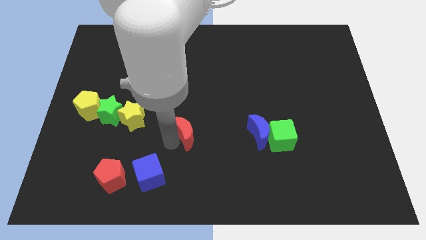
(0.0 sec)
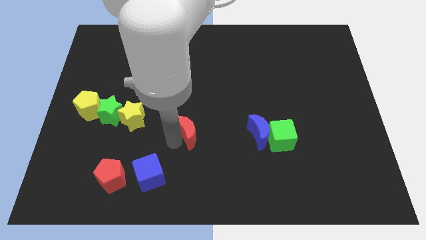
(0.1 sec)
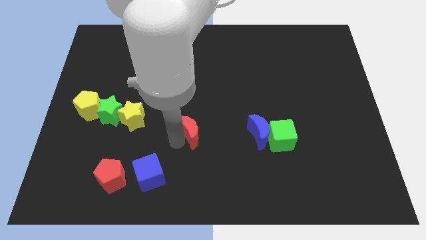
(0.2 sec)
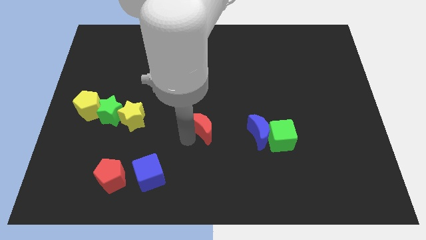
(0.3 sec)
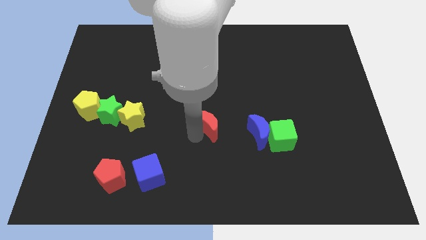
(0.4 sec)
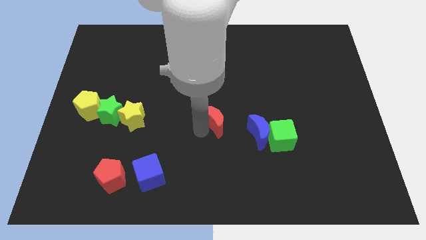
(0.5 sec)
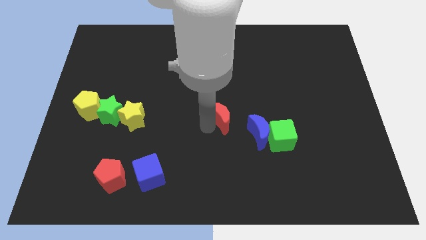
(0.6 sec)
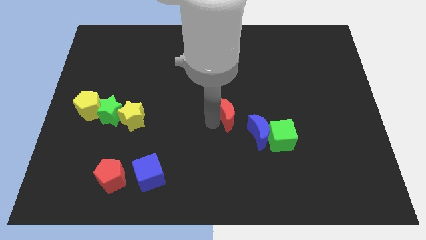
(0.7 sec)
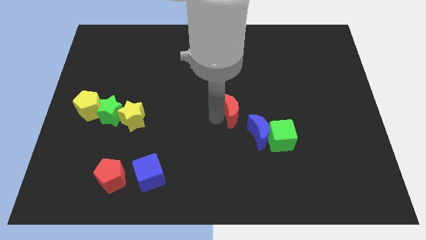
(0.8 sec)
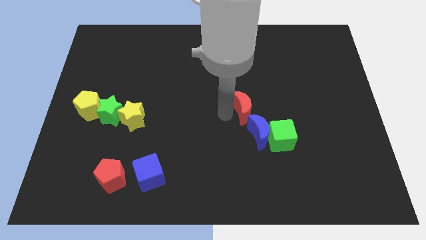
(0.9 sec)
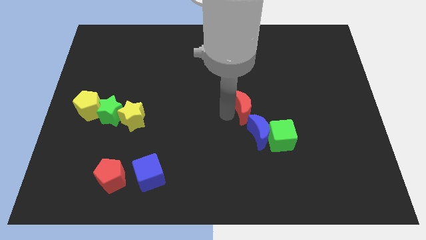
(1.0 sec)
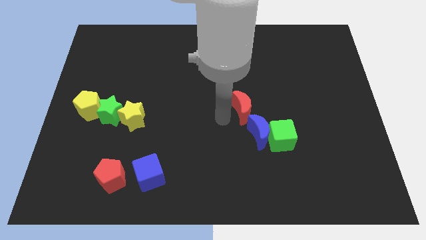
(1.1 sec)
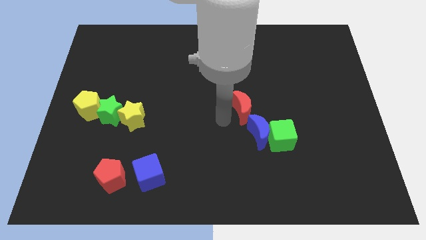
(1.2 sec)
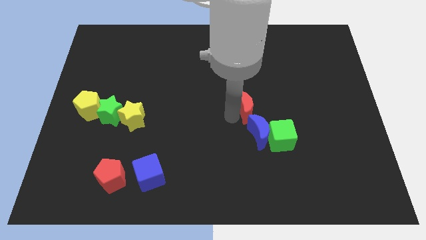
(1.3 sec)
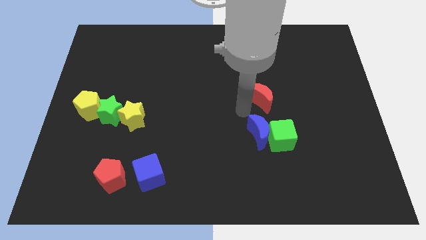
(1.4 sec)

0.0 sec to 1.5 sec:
move the red crescent to the top left side of the blue moon

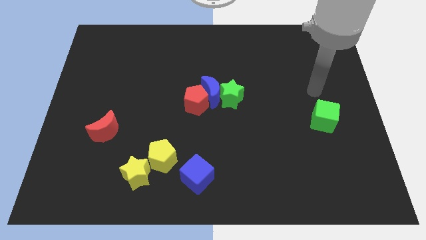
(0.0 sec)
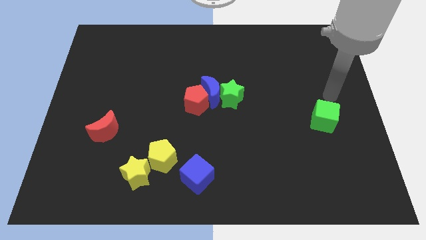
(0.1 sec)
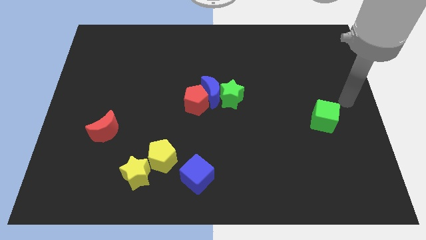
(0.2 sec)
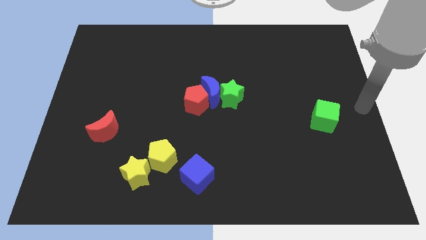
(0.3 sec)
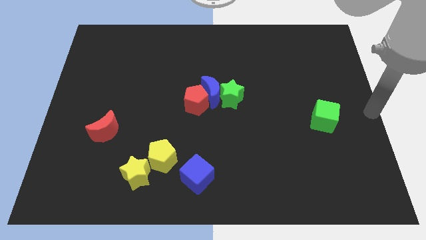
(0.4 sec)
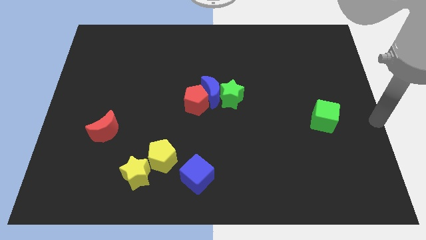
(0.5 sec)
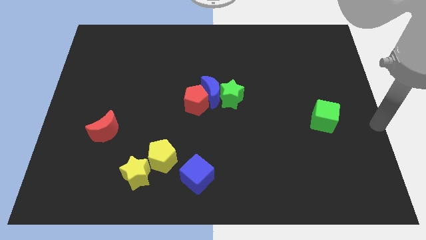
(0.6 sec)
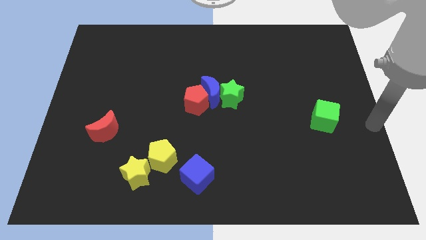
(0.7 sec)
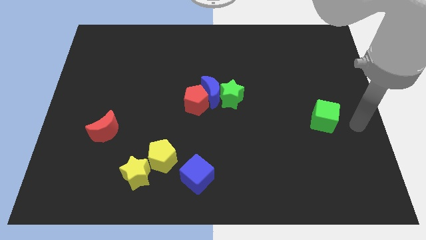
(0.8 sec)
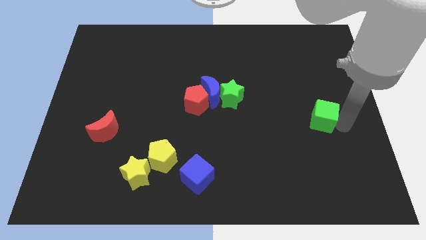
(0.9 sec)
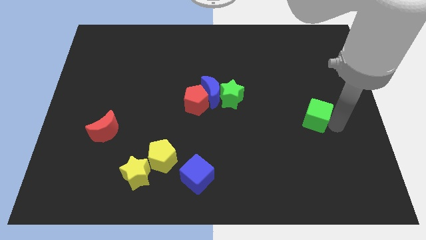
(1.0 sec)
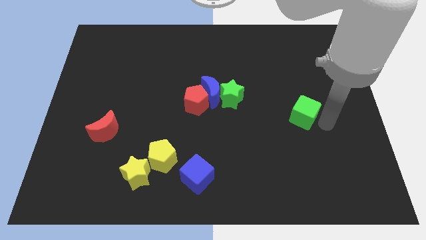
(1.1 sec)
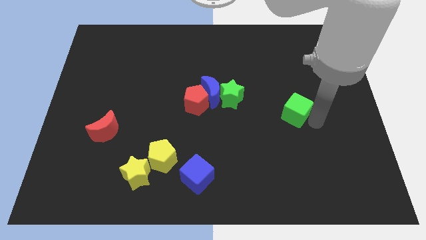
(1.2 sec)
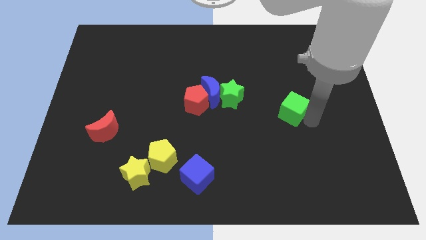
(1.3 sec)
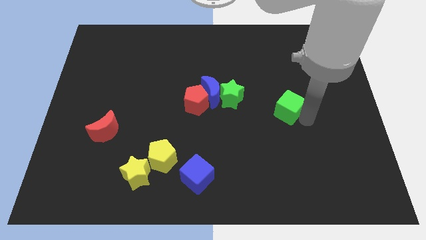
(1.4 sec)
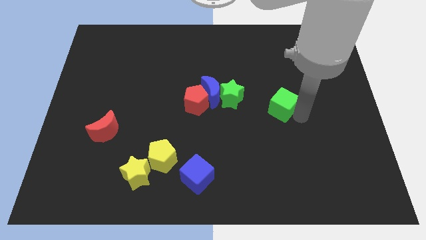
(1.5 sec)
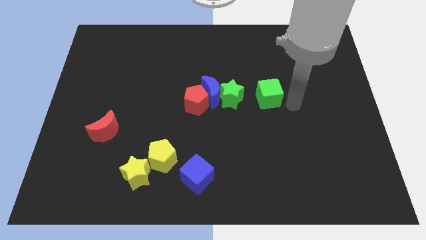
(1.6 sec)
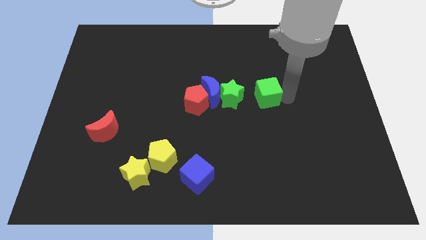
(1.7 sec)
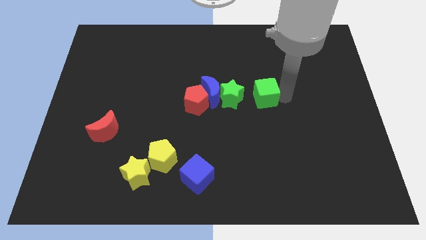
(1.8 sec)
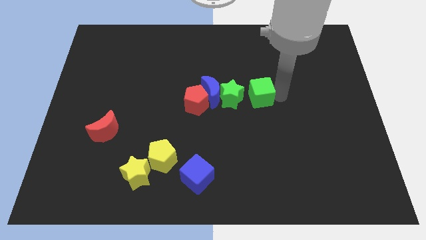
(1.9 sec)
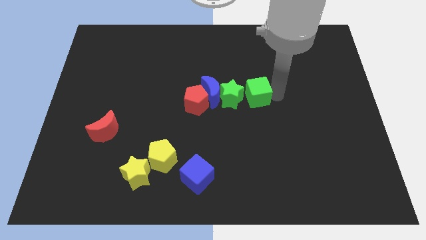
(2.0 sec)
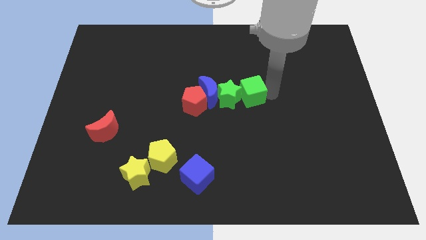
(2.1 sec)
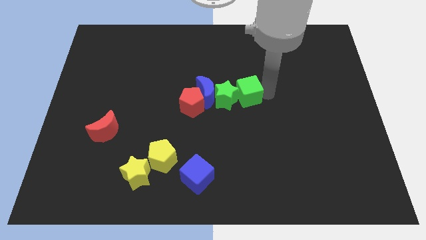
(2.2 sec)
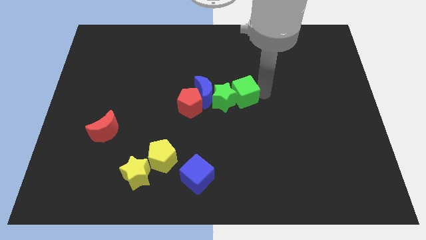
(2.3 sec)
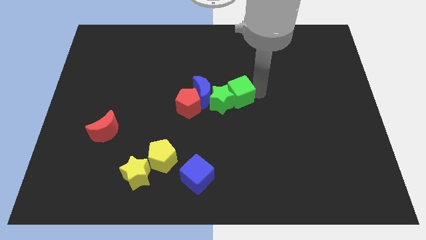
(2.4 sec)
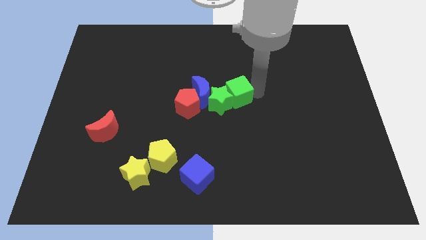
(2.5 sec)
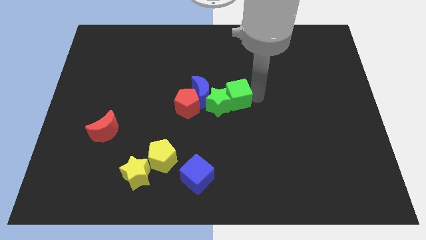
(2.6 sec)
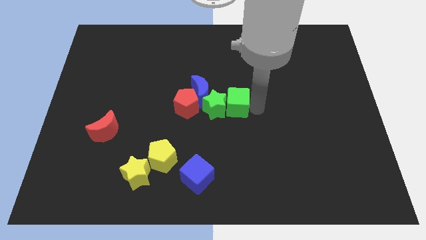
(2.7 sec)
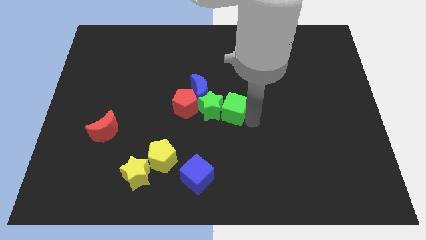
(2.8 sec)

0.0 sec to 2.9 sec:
place the green cube right to the green star

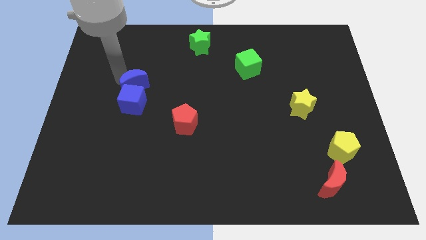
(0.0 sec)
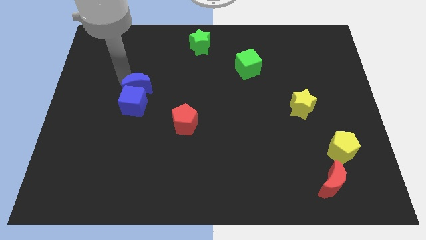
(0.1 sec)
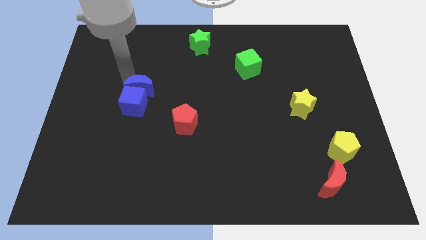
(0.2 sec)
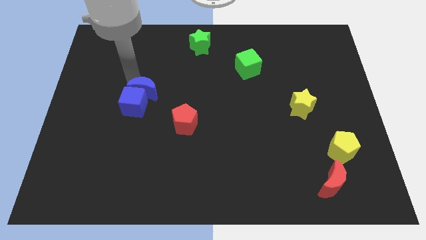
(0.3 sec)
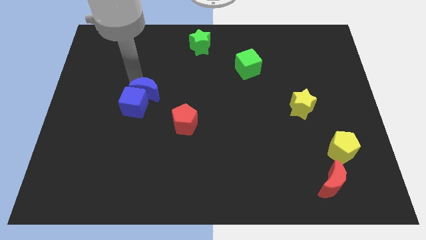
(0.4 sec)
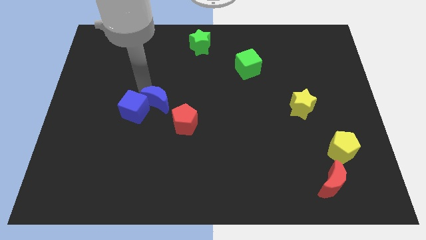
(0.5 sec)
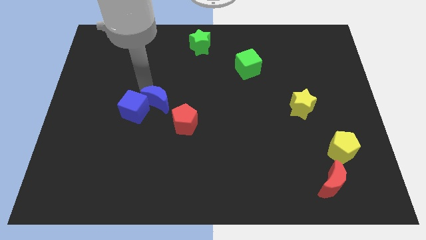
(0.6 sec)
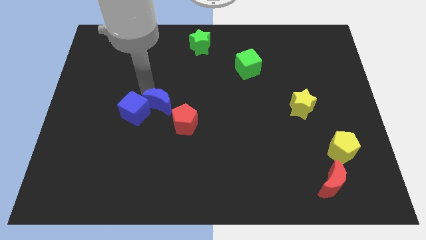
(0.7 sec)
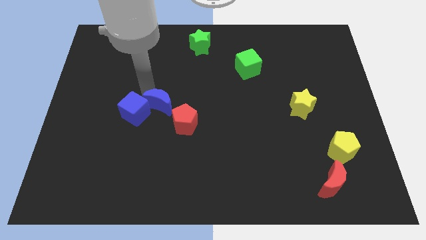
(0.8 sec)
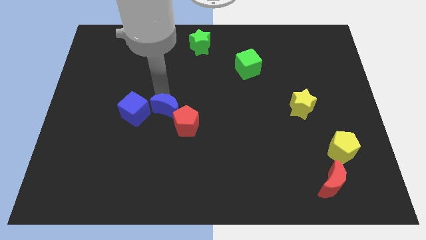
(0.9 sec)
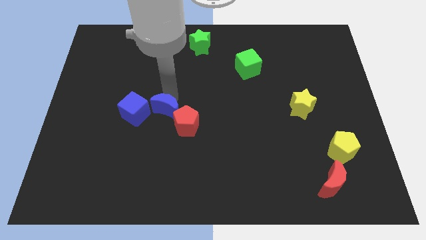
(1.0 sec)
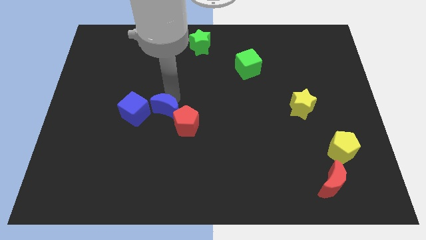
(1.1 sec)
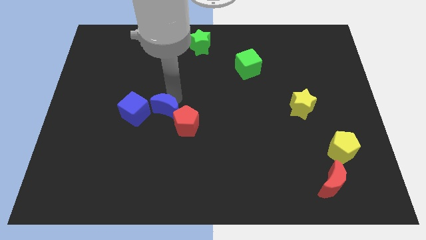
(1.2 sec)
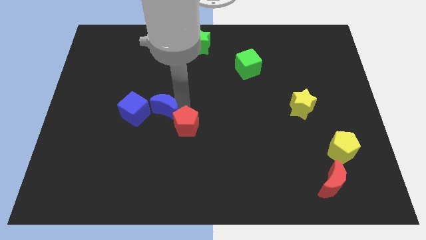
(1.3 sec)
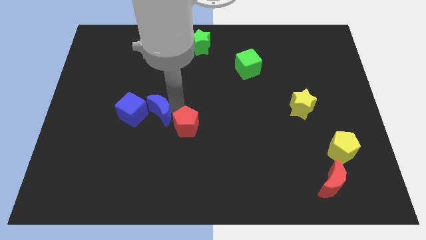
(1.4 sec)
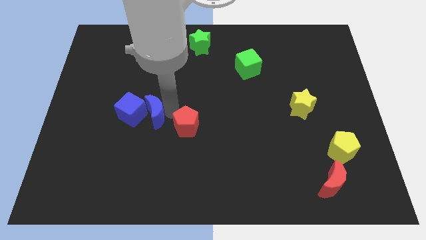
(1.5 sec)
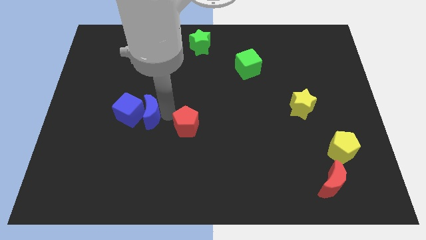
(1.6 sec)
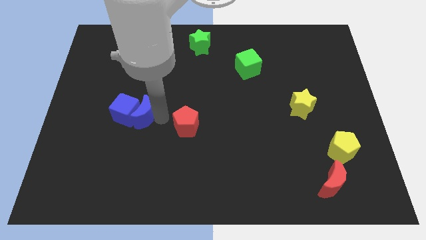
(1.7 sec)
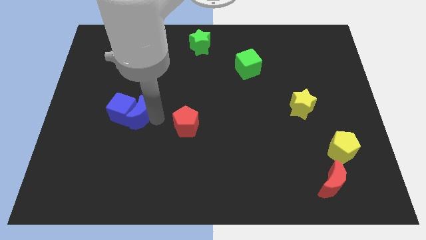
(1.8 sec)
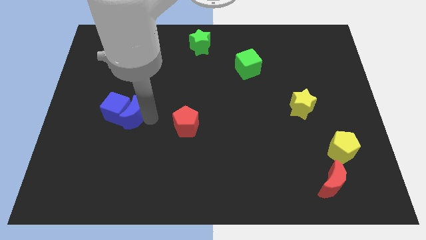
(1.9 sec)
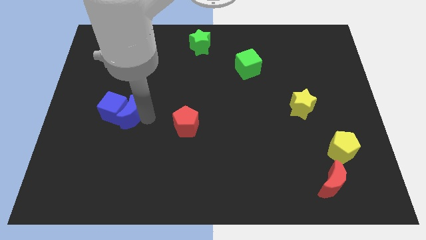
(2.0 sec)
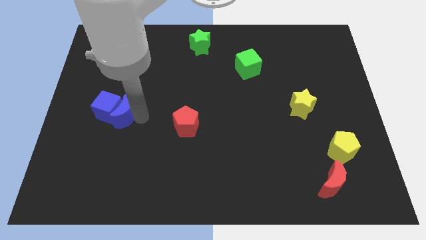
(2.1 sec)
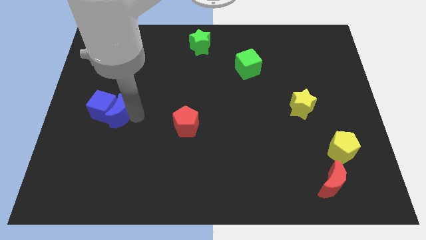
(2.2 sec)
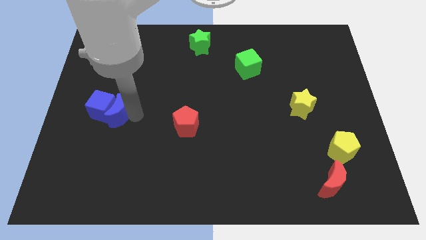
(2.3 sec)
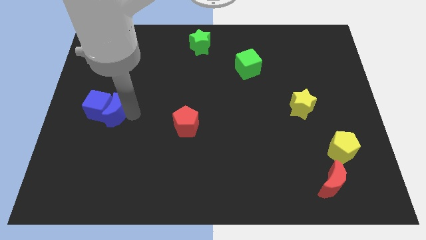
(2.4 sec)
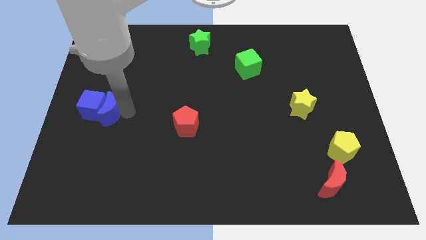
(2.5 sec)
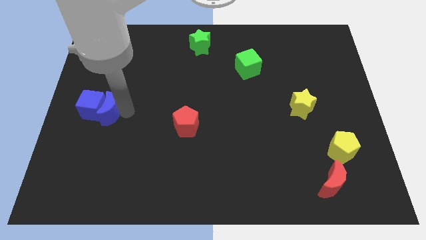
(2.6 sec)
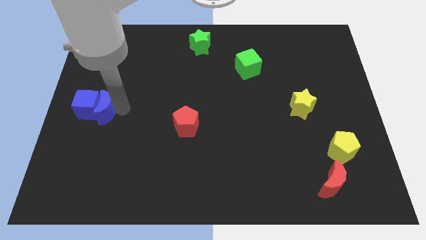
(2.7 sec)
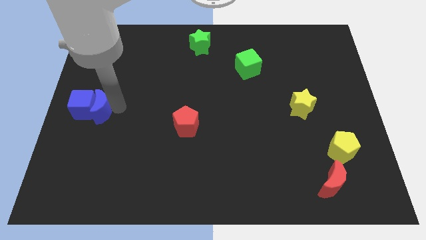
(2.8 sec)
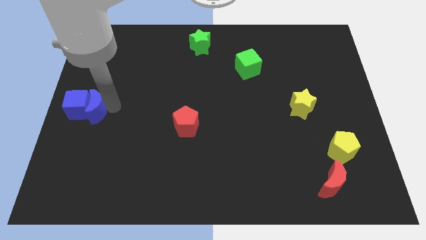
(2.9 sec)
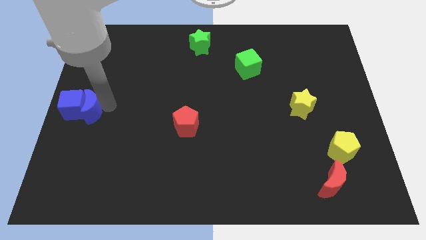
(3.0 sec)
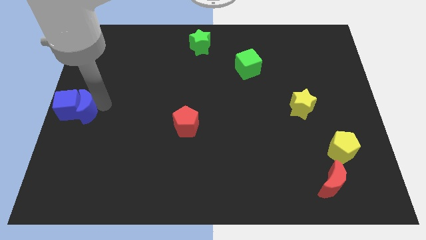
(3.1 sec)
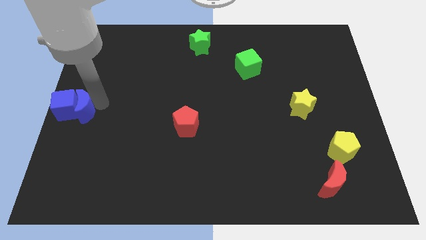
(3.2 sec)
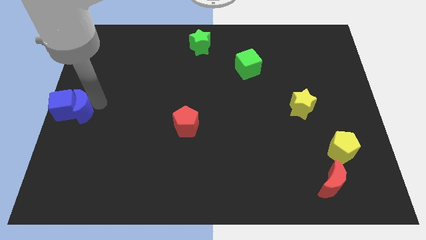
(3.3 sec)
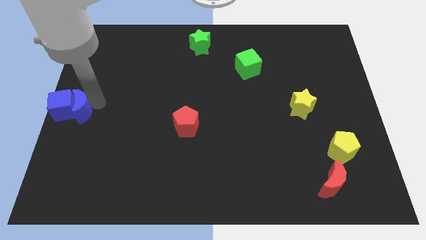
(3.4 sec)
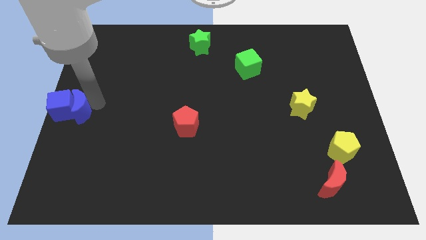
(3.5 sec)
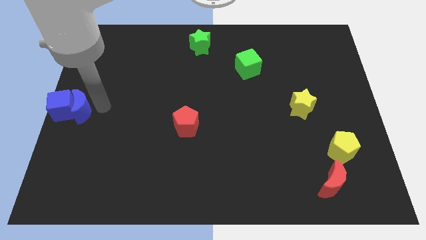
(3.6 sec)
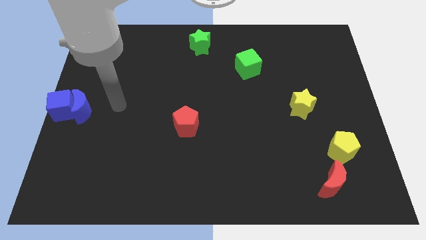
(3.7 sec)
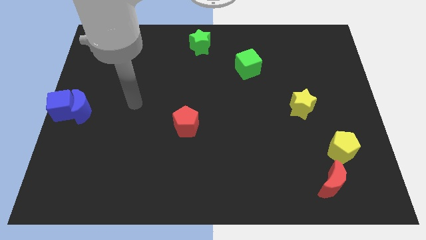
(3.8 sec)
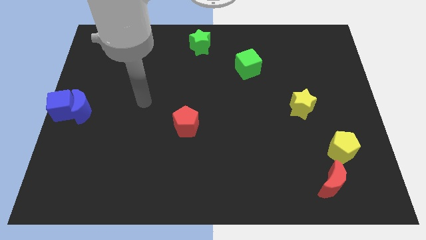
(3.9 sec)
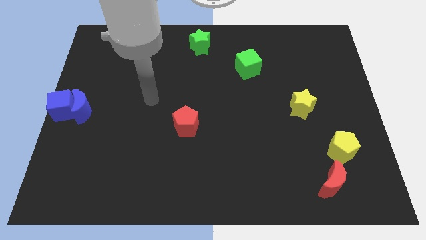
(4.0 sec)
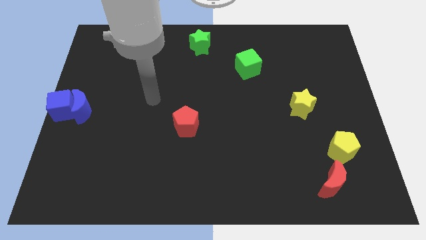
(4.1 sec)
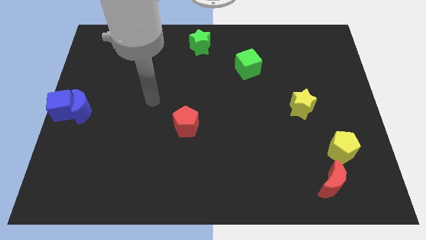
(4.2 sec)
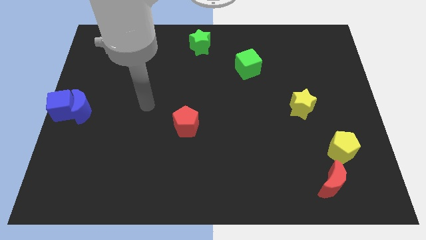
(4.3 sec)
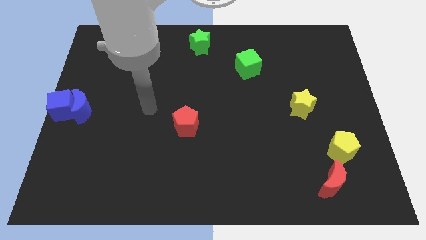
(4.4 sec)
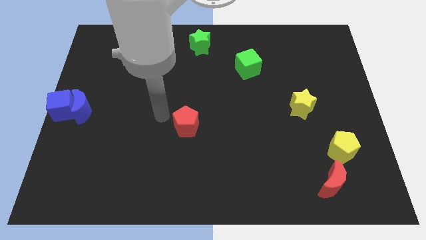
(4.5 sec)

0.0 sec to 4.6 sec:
push the blue blocks to the left center of the board
